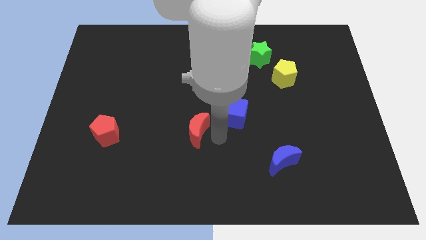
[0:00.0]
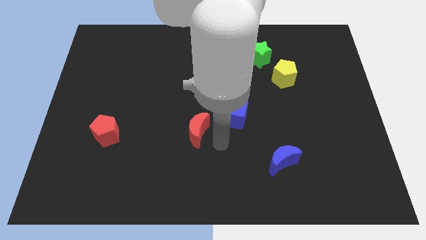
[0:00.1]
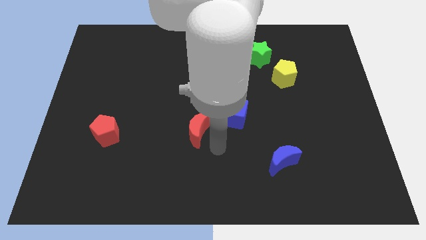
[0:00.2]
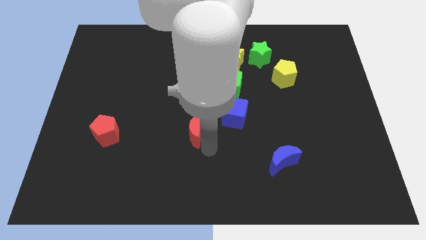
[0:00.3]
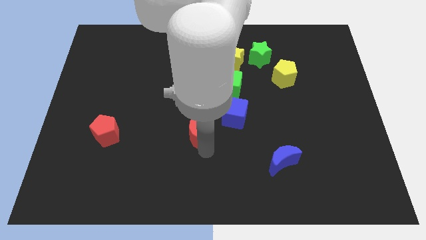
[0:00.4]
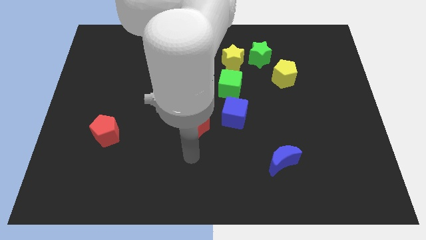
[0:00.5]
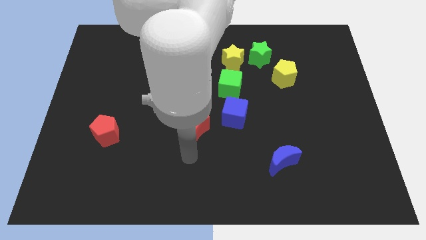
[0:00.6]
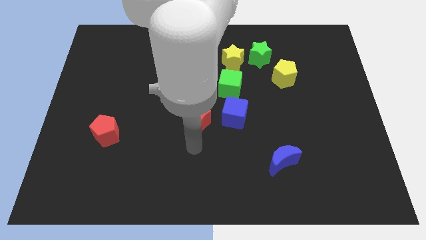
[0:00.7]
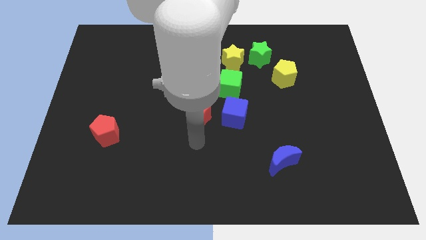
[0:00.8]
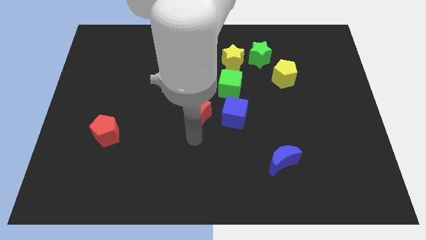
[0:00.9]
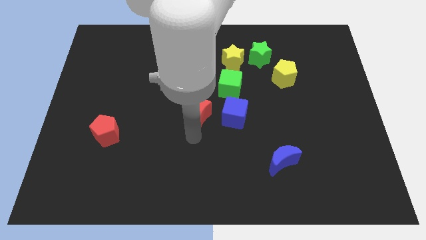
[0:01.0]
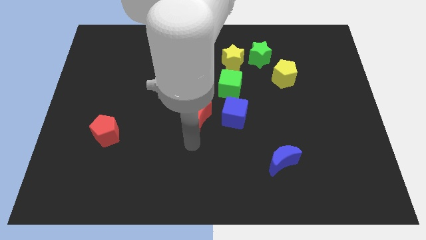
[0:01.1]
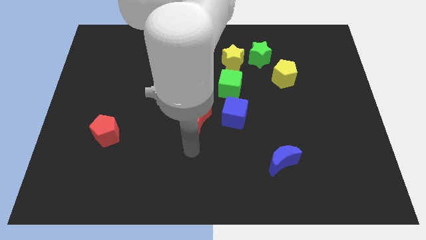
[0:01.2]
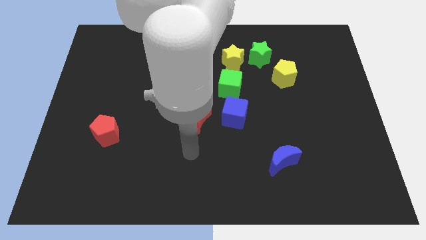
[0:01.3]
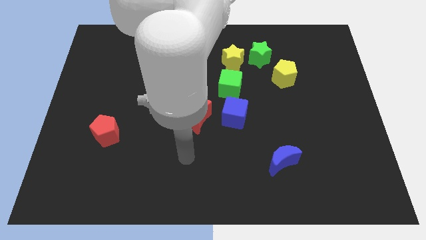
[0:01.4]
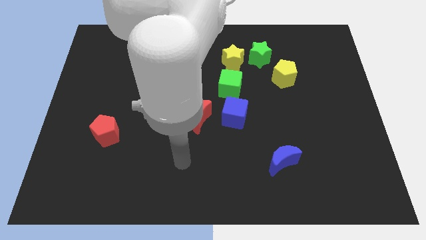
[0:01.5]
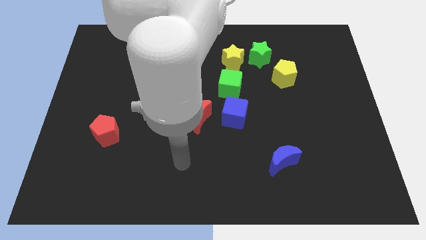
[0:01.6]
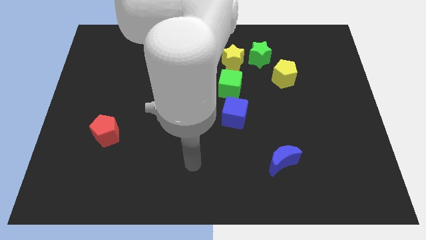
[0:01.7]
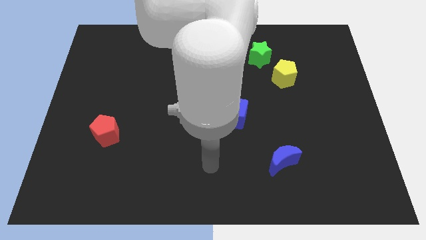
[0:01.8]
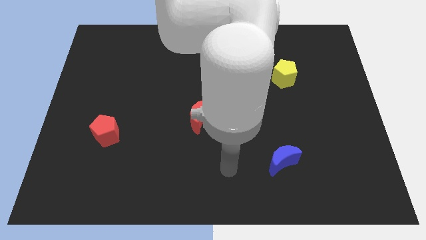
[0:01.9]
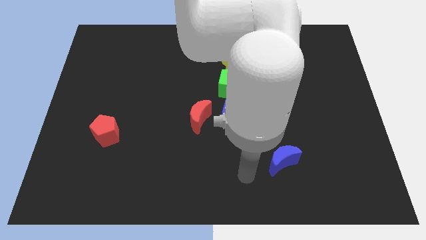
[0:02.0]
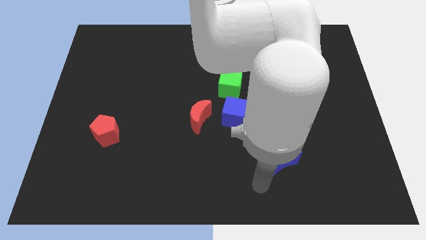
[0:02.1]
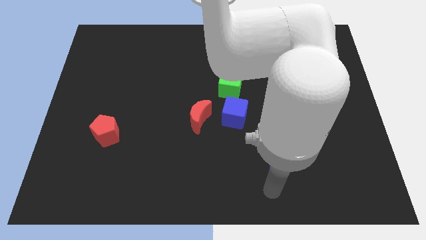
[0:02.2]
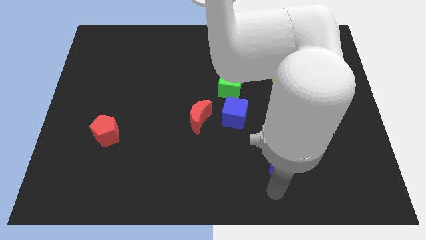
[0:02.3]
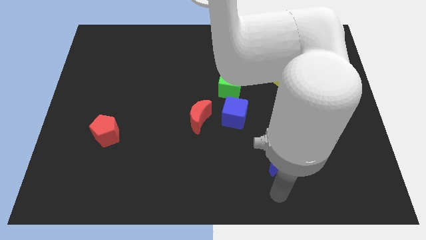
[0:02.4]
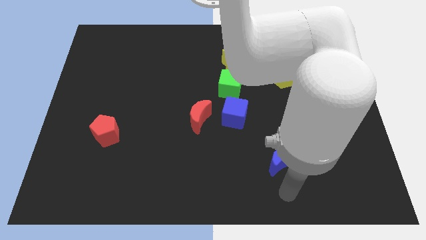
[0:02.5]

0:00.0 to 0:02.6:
move the red crescent to the left of the blue cube

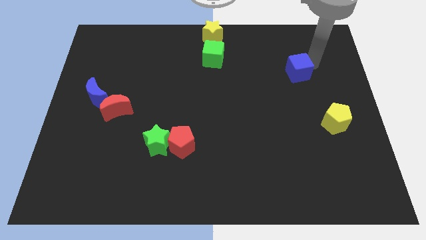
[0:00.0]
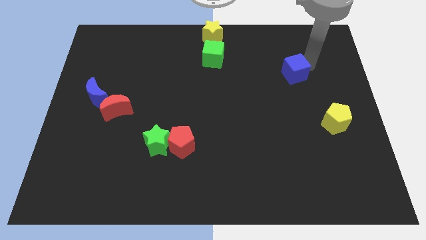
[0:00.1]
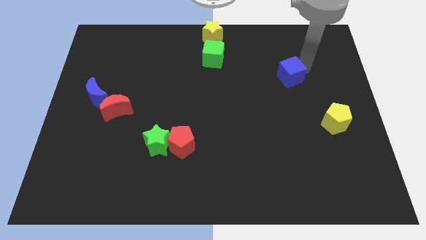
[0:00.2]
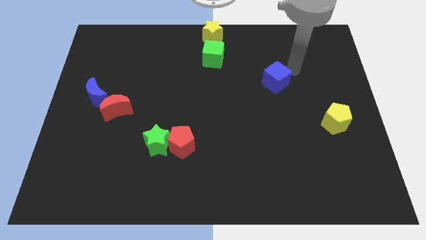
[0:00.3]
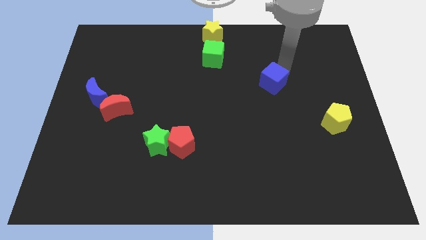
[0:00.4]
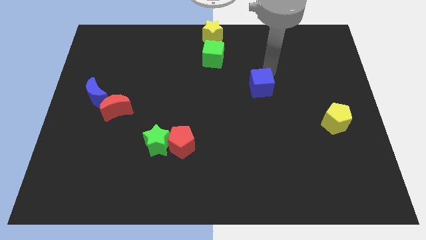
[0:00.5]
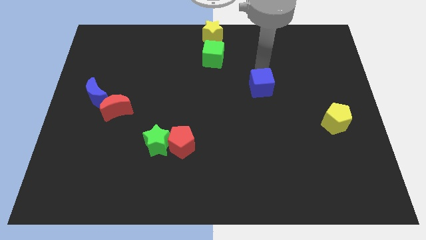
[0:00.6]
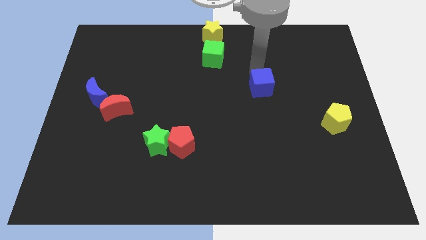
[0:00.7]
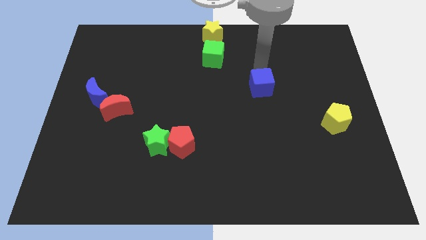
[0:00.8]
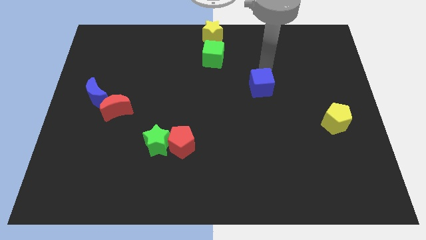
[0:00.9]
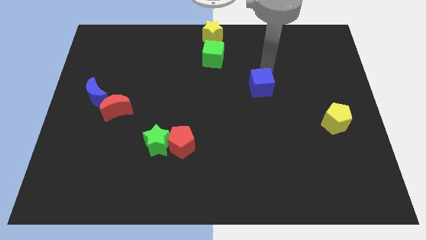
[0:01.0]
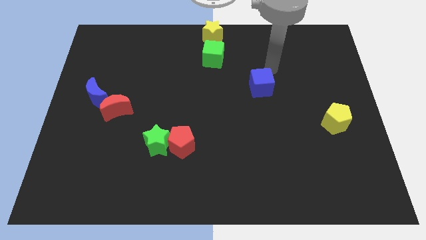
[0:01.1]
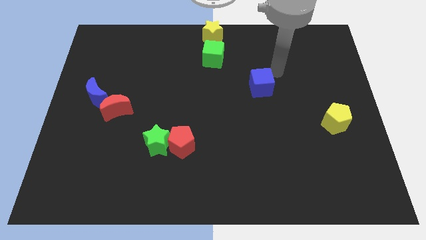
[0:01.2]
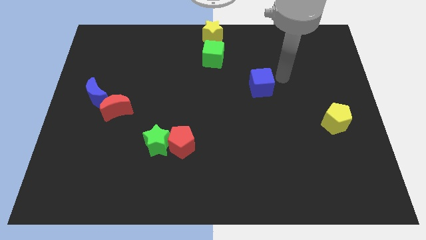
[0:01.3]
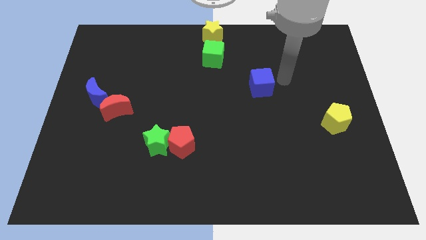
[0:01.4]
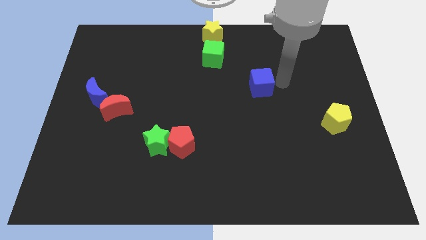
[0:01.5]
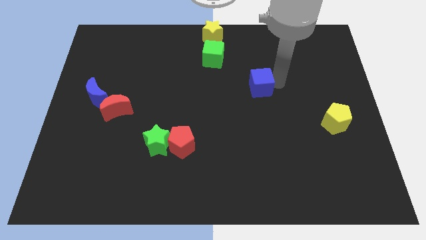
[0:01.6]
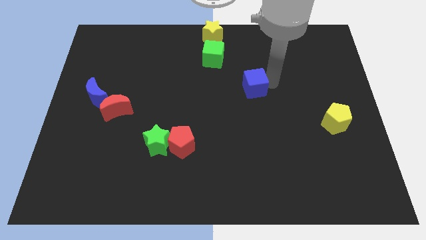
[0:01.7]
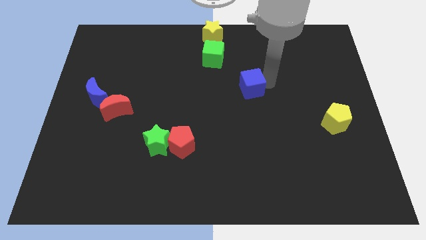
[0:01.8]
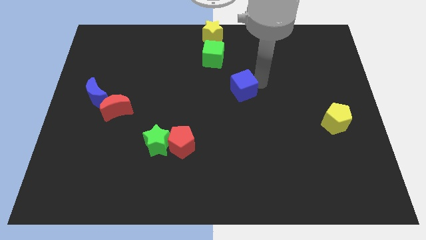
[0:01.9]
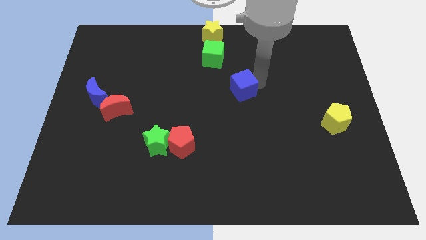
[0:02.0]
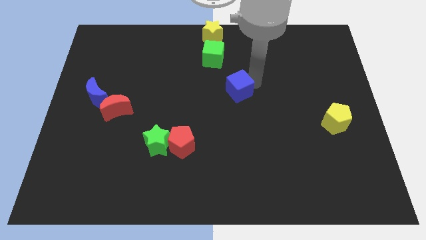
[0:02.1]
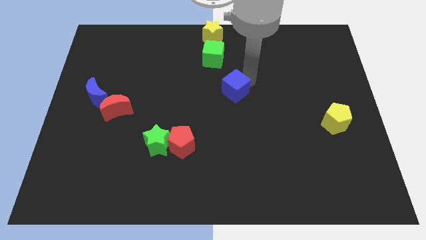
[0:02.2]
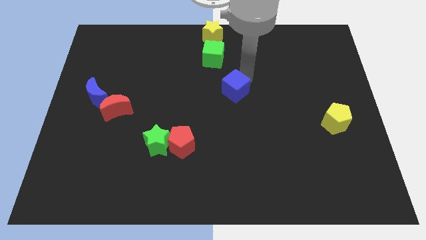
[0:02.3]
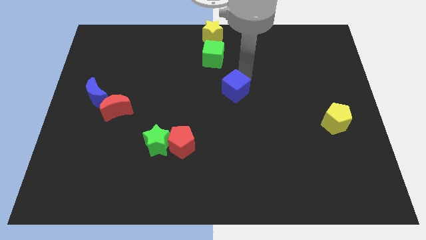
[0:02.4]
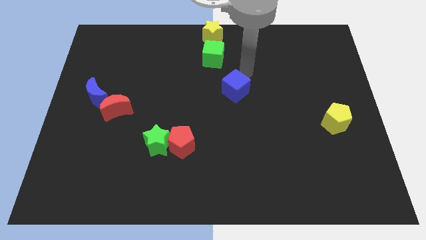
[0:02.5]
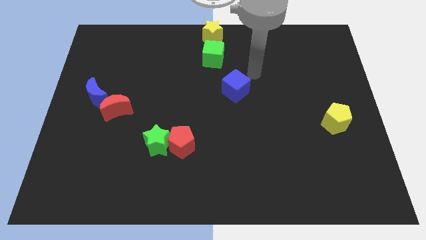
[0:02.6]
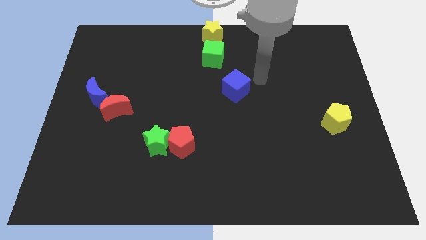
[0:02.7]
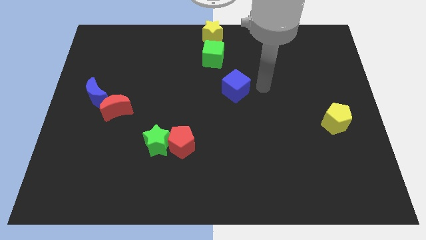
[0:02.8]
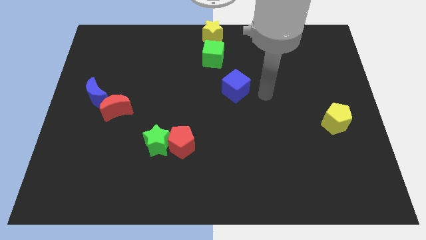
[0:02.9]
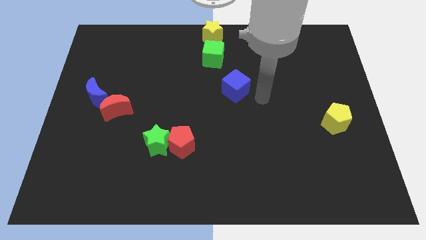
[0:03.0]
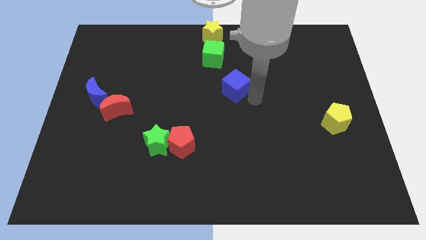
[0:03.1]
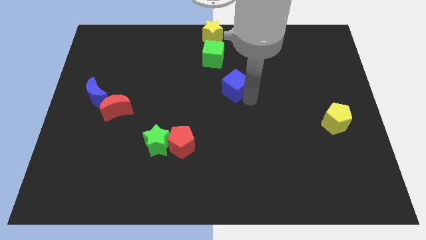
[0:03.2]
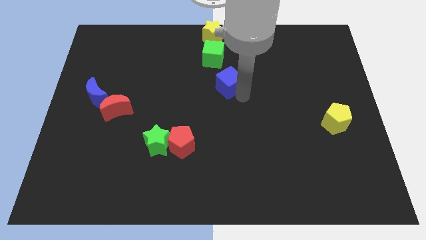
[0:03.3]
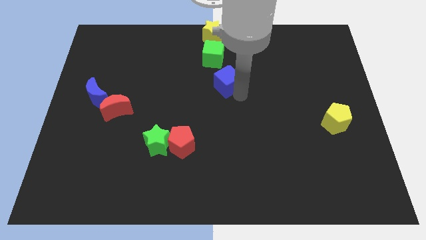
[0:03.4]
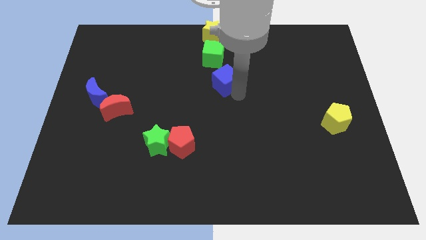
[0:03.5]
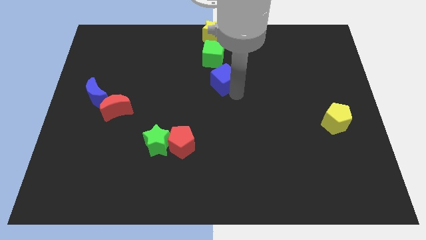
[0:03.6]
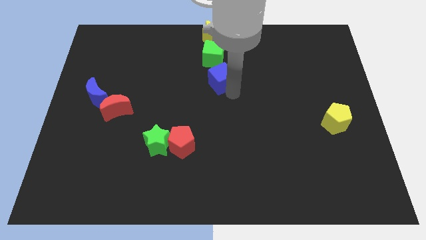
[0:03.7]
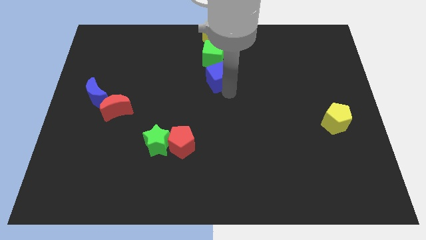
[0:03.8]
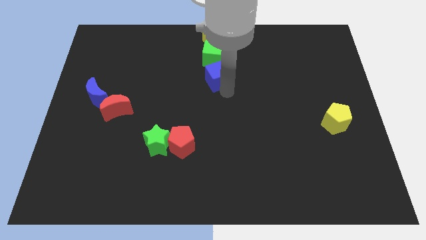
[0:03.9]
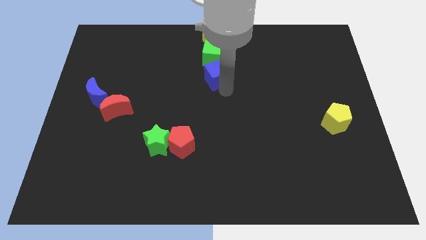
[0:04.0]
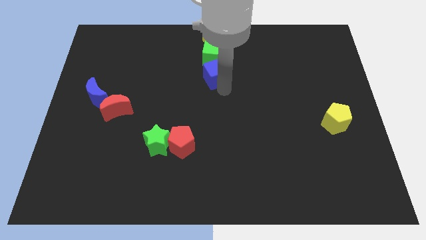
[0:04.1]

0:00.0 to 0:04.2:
move blue cube to the center below green cube

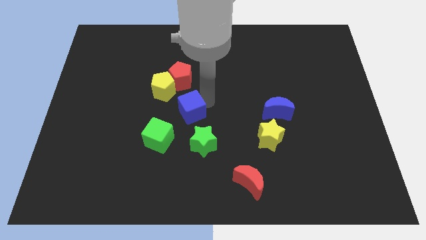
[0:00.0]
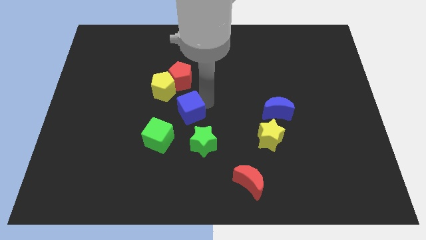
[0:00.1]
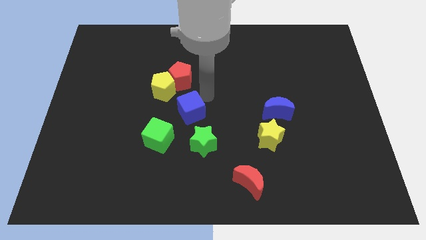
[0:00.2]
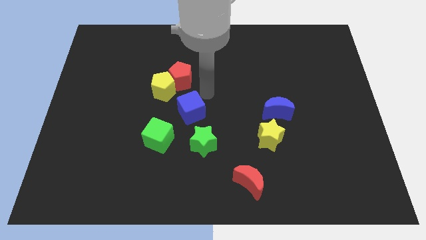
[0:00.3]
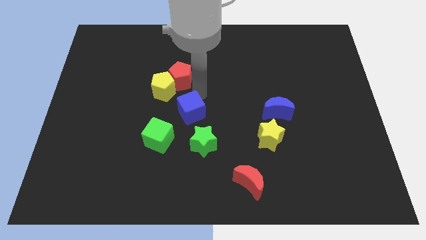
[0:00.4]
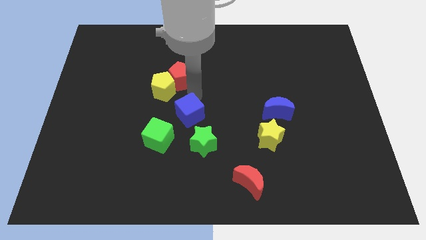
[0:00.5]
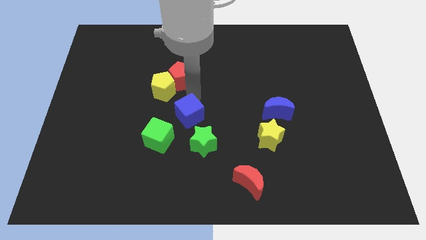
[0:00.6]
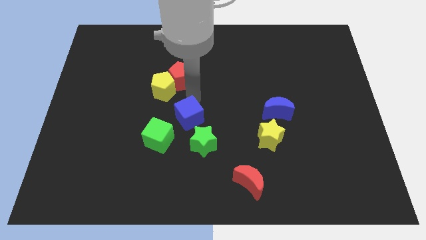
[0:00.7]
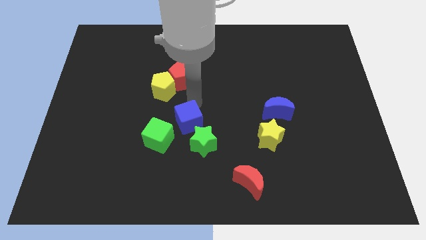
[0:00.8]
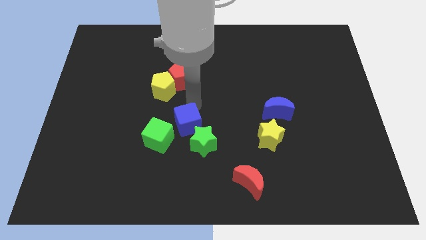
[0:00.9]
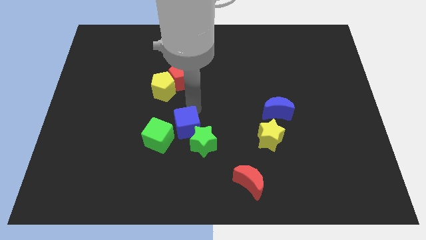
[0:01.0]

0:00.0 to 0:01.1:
move the blue cube into the green blocks

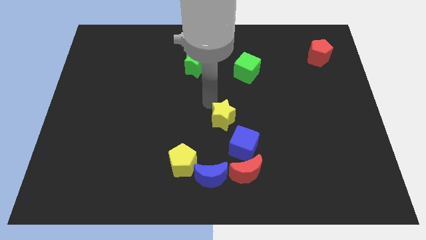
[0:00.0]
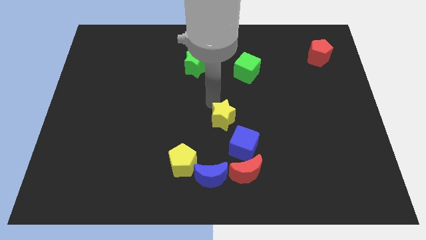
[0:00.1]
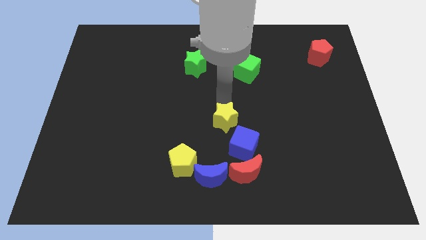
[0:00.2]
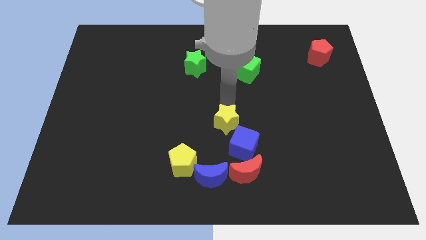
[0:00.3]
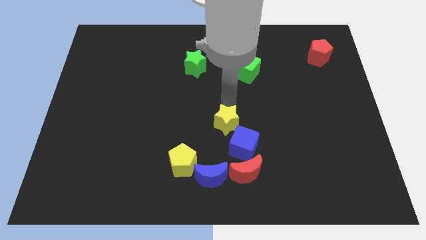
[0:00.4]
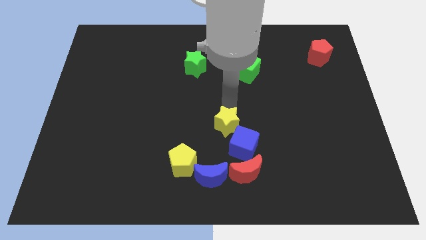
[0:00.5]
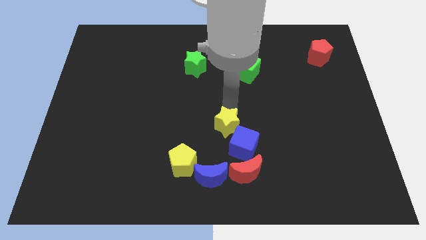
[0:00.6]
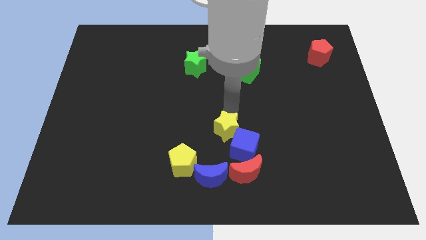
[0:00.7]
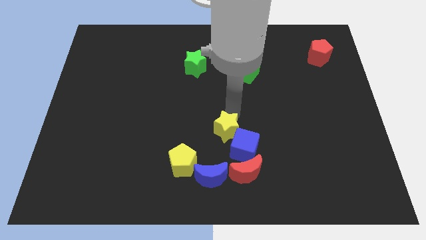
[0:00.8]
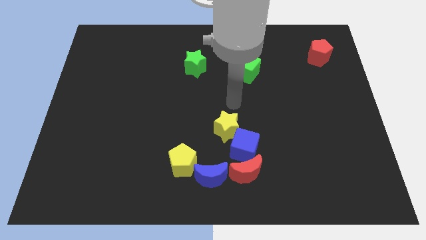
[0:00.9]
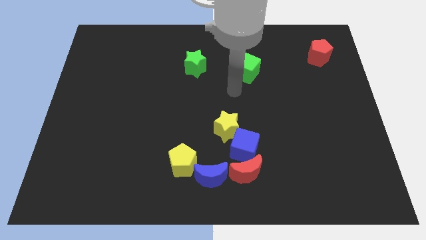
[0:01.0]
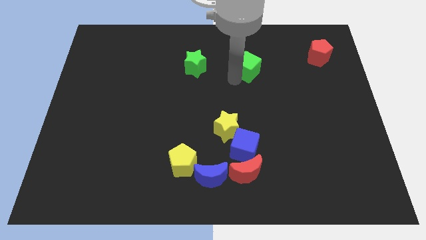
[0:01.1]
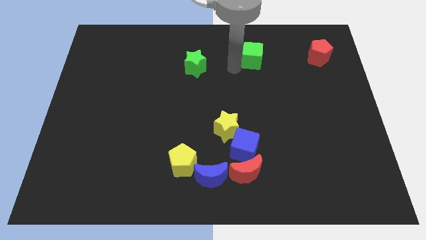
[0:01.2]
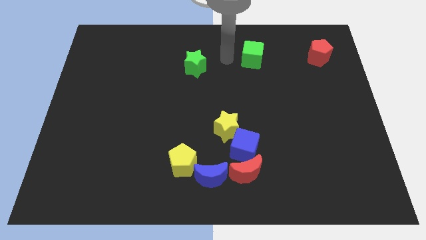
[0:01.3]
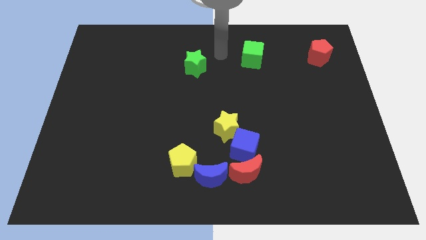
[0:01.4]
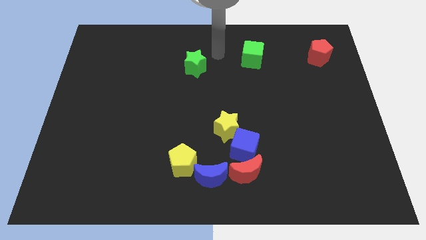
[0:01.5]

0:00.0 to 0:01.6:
push the yellow star into the blue cube
